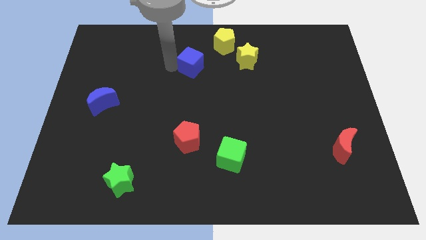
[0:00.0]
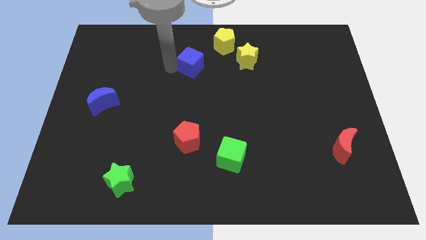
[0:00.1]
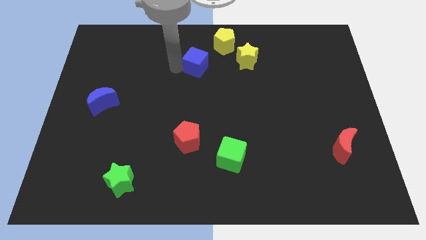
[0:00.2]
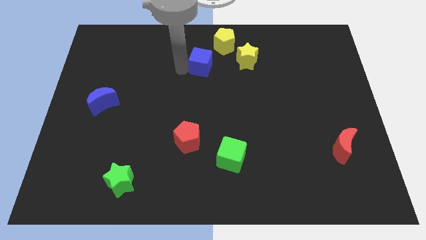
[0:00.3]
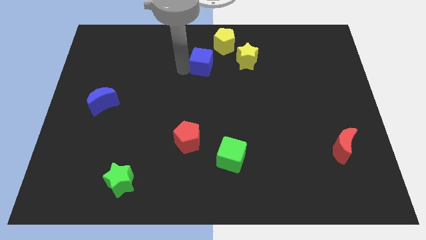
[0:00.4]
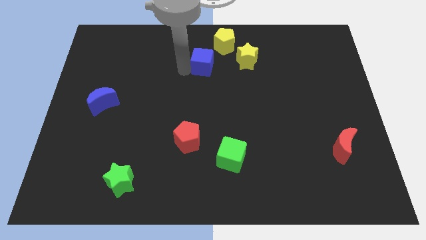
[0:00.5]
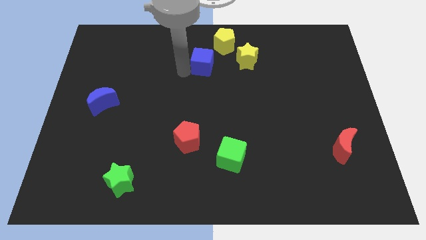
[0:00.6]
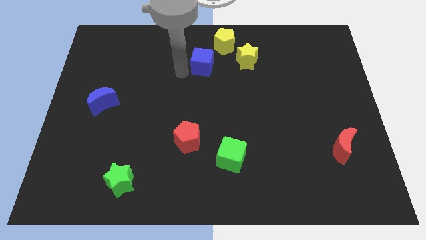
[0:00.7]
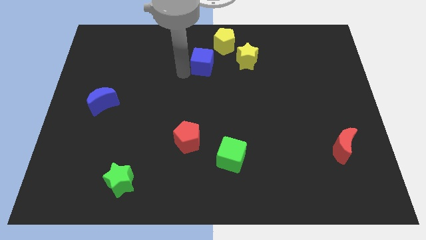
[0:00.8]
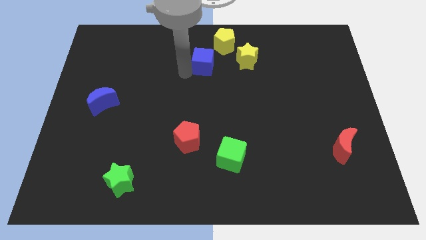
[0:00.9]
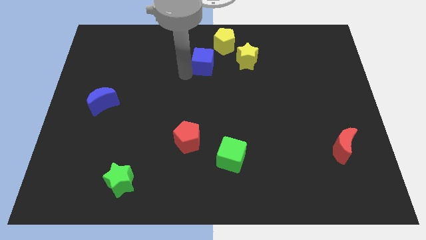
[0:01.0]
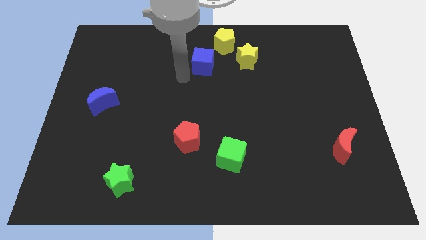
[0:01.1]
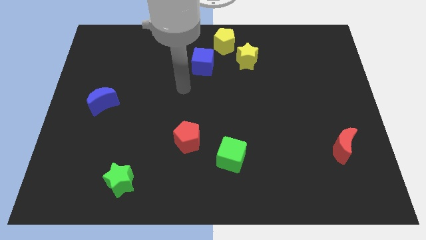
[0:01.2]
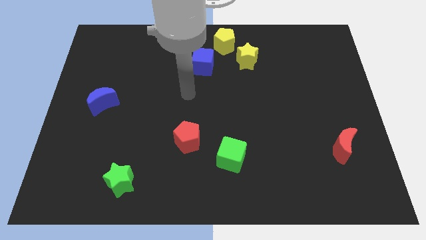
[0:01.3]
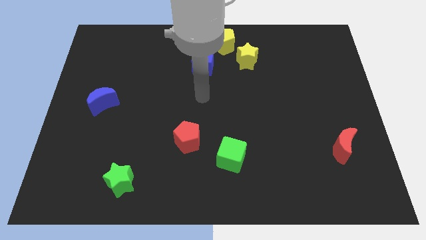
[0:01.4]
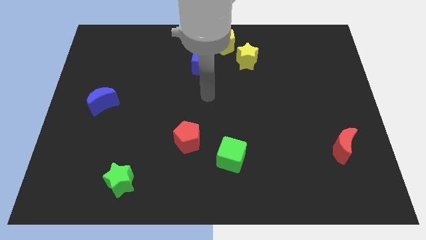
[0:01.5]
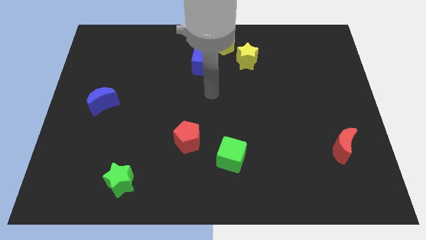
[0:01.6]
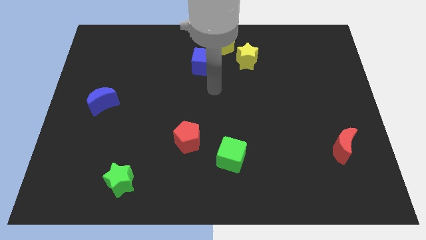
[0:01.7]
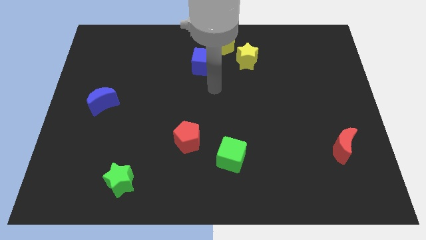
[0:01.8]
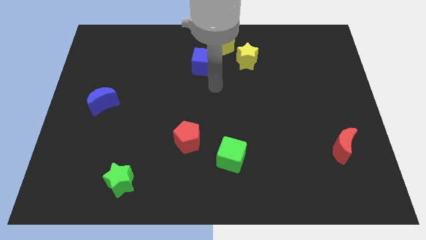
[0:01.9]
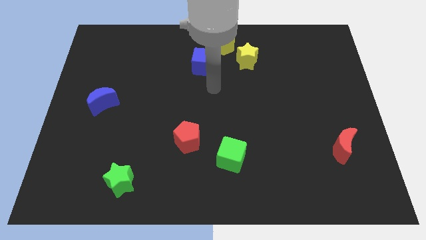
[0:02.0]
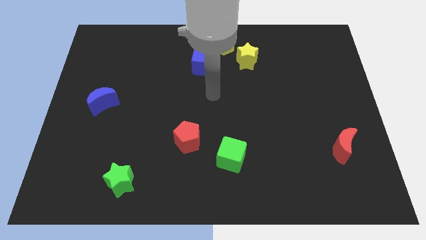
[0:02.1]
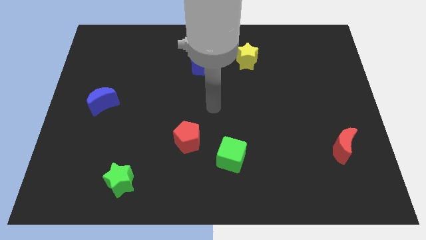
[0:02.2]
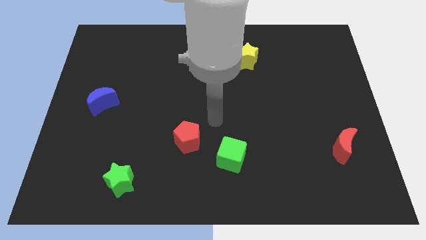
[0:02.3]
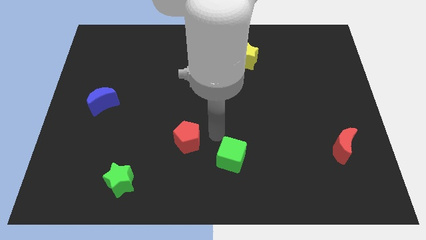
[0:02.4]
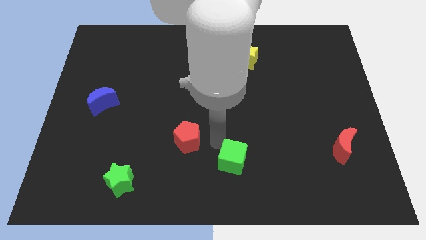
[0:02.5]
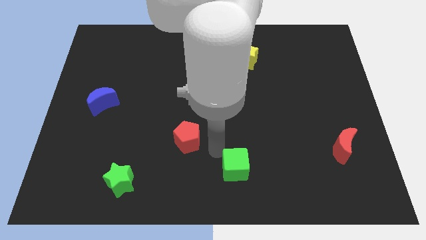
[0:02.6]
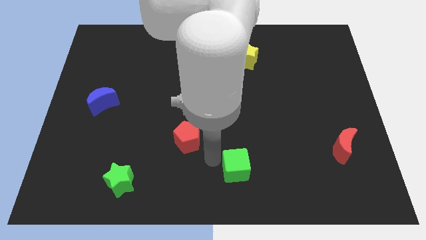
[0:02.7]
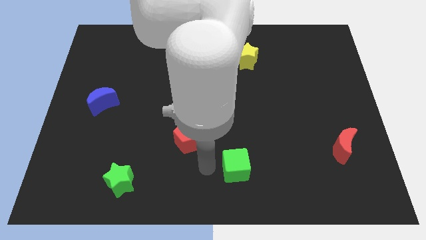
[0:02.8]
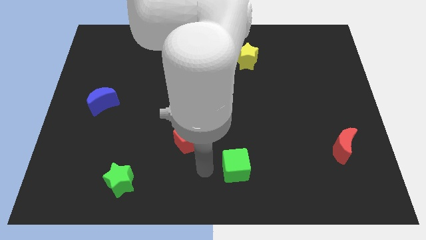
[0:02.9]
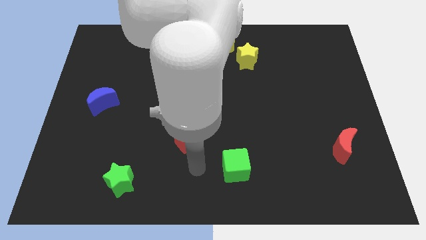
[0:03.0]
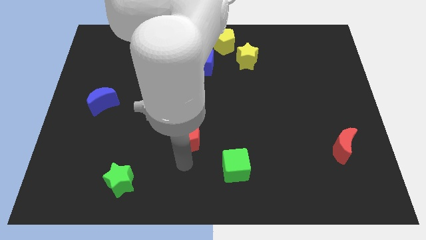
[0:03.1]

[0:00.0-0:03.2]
move the blue cube towards yellow pentagon

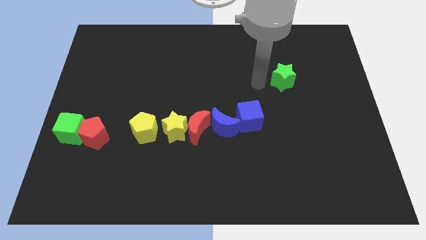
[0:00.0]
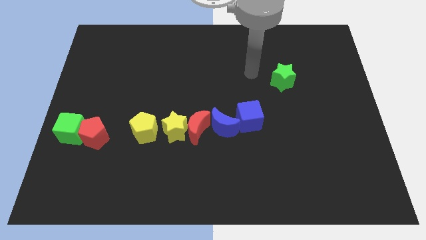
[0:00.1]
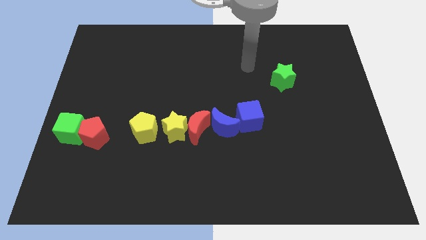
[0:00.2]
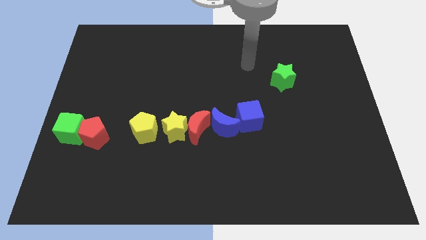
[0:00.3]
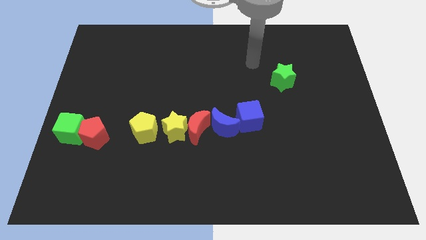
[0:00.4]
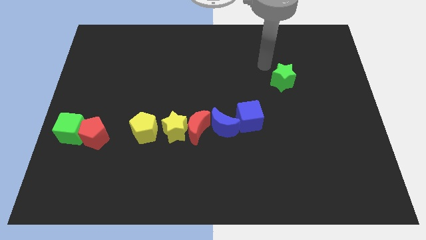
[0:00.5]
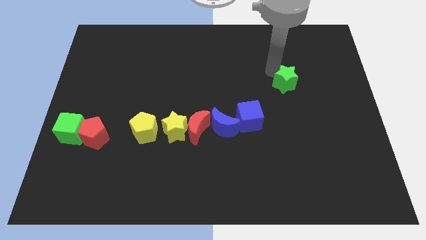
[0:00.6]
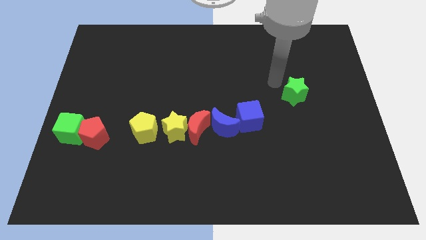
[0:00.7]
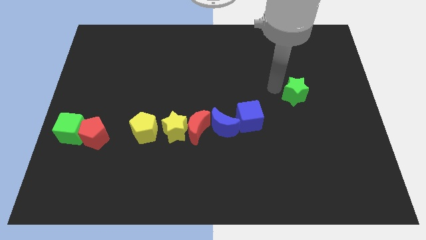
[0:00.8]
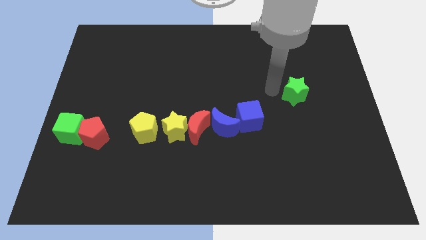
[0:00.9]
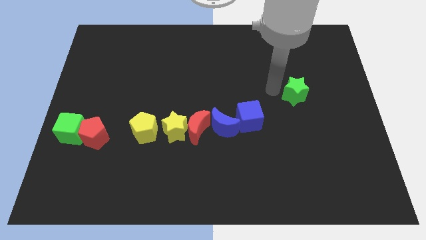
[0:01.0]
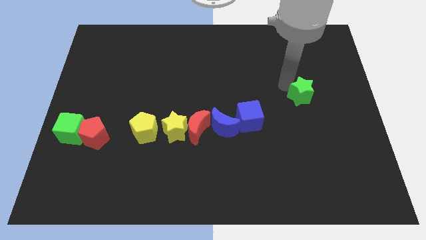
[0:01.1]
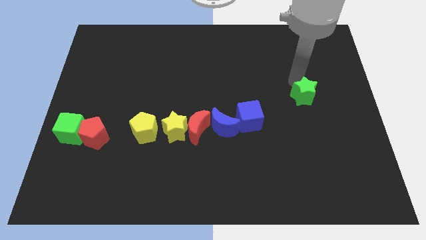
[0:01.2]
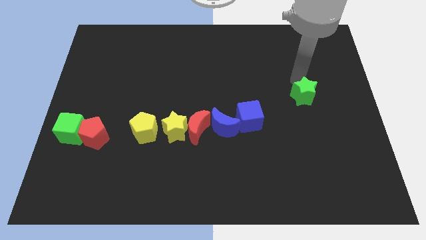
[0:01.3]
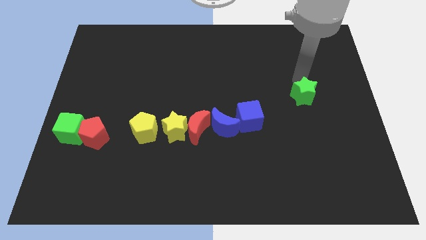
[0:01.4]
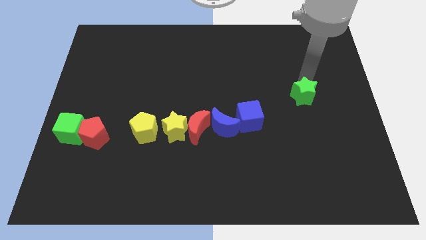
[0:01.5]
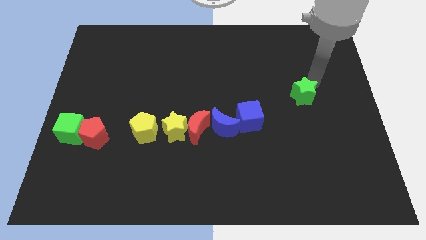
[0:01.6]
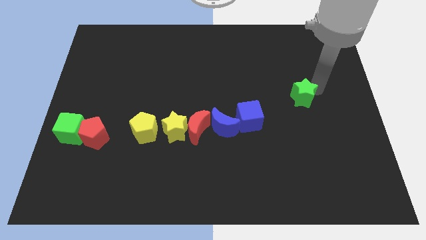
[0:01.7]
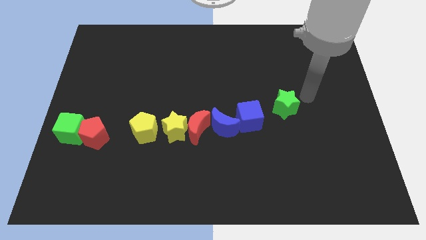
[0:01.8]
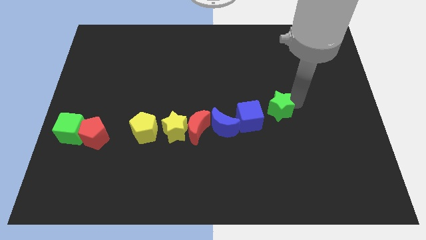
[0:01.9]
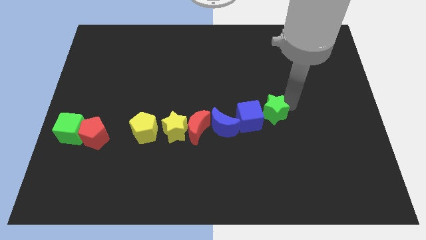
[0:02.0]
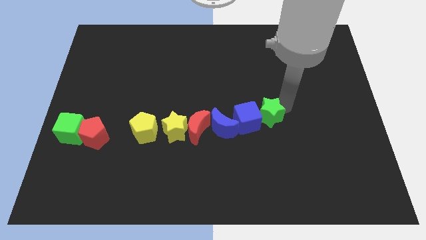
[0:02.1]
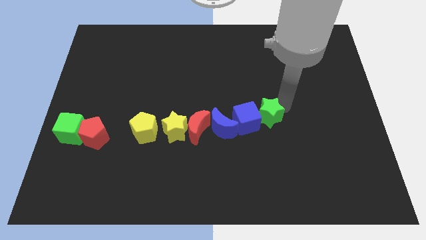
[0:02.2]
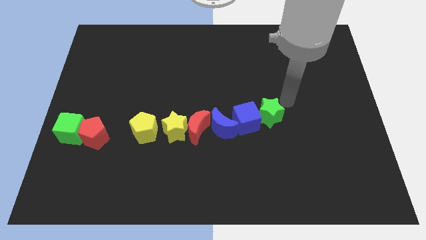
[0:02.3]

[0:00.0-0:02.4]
push the green star into the blue cube

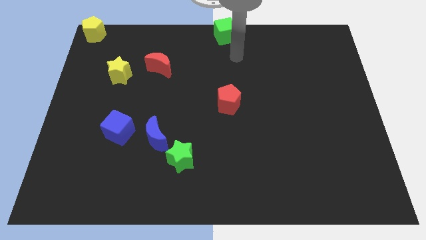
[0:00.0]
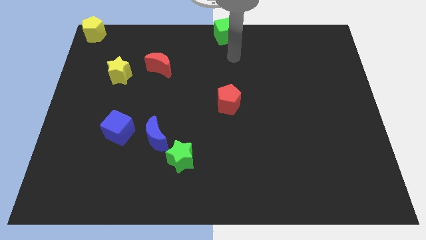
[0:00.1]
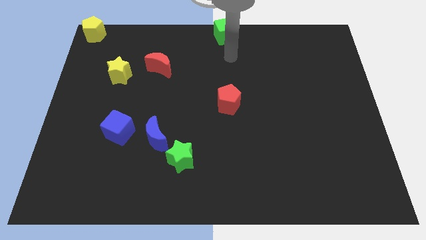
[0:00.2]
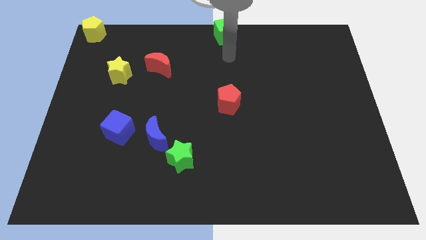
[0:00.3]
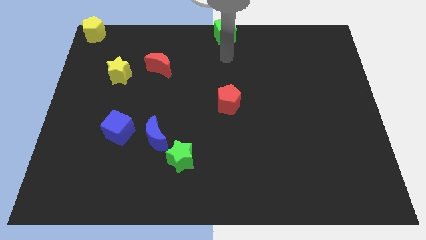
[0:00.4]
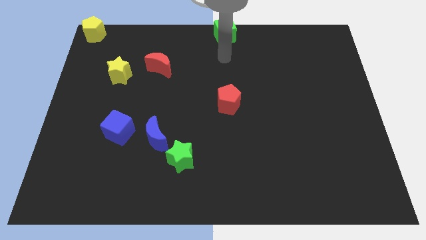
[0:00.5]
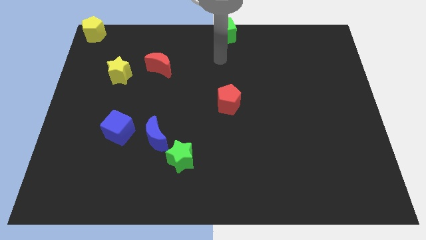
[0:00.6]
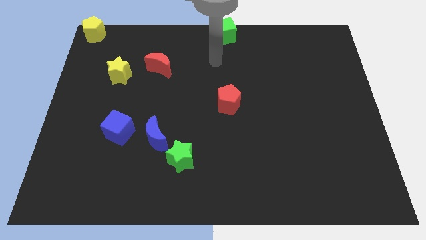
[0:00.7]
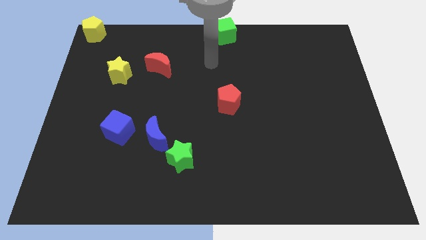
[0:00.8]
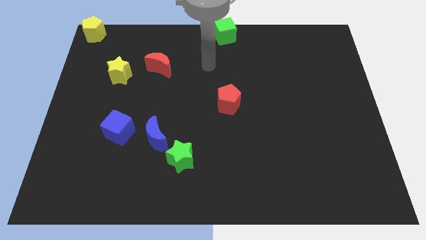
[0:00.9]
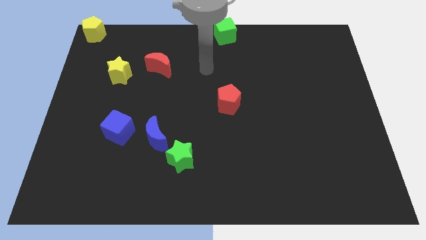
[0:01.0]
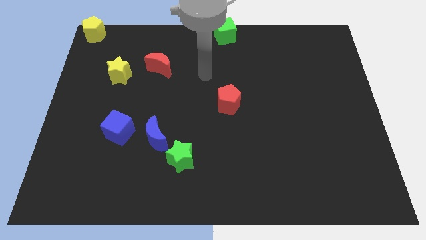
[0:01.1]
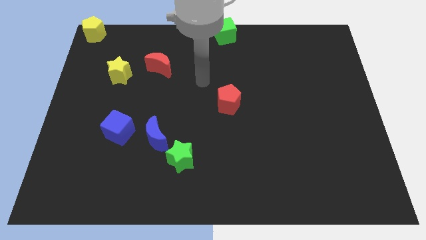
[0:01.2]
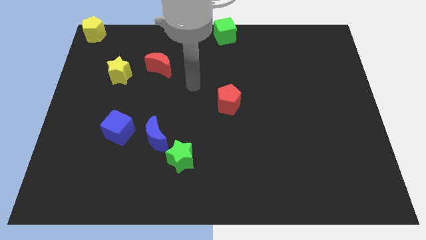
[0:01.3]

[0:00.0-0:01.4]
move your arm to the center of the board

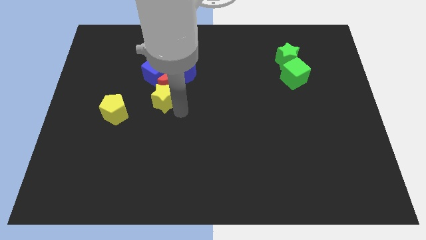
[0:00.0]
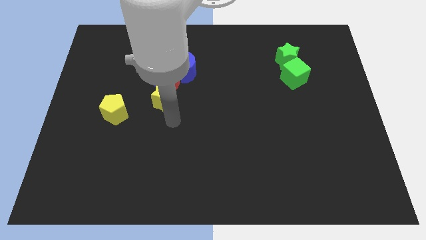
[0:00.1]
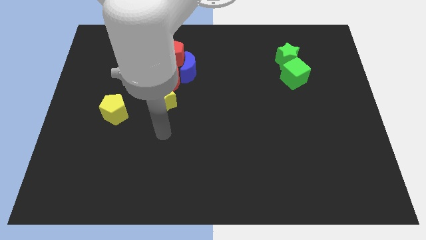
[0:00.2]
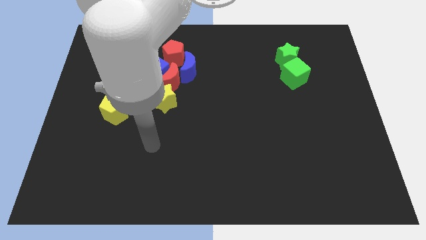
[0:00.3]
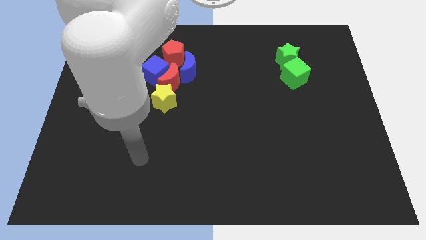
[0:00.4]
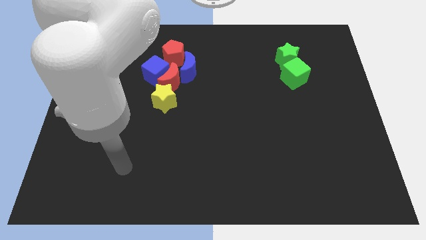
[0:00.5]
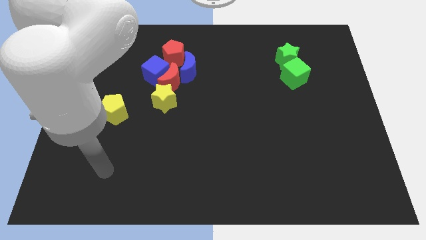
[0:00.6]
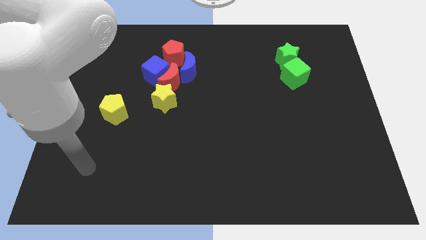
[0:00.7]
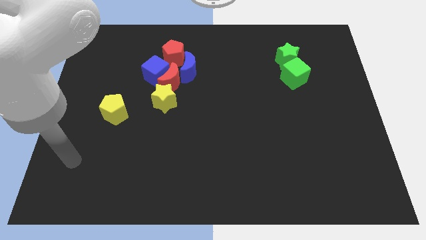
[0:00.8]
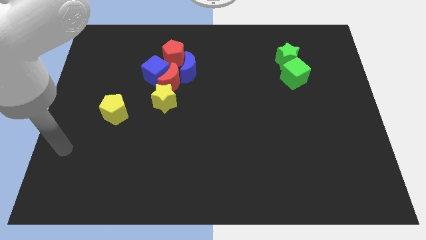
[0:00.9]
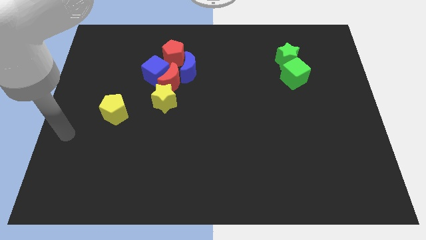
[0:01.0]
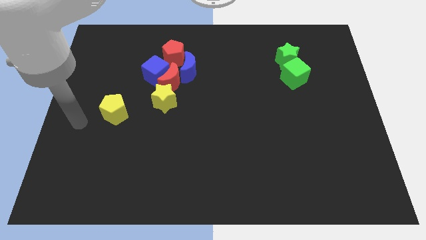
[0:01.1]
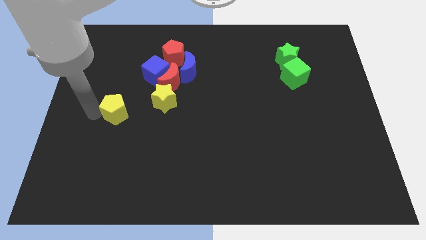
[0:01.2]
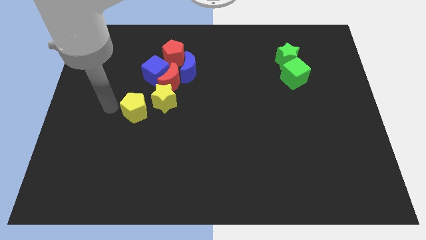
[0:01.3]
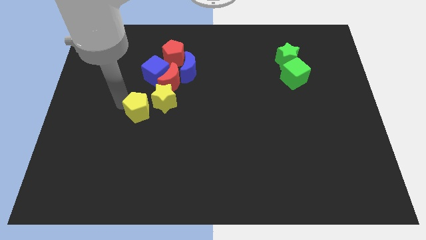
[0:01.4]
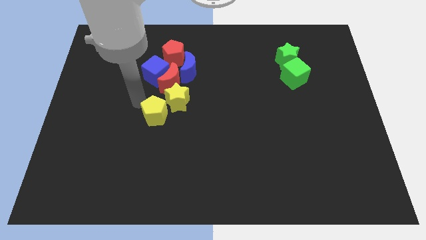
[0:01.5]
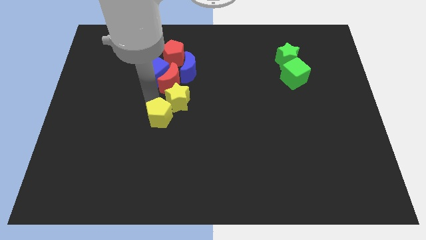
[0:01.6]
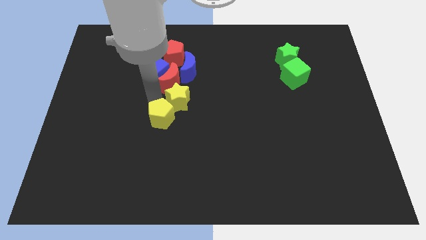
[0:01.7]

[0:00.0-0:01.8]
push the yellow pentagon into the yellow star
